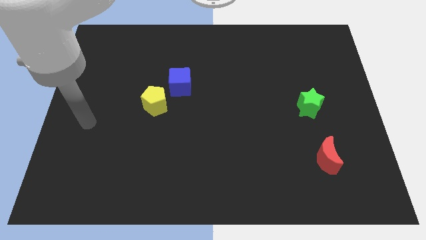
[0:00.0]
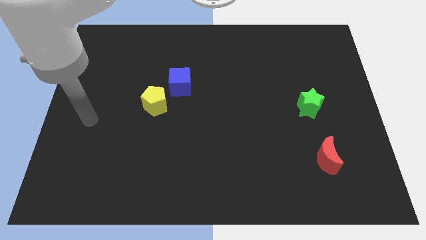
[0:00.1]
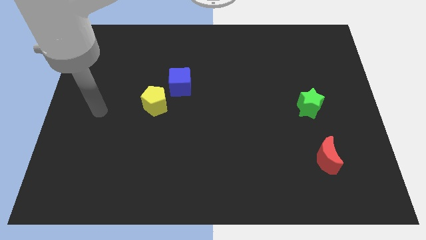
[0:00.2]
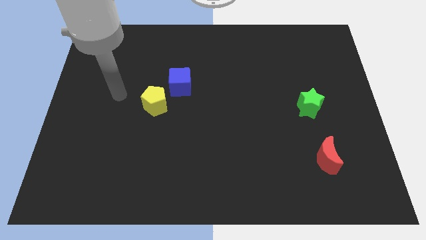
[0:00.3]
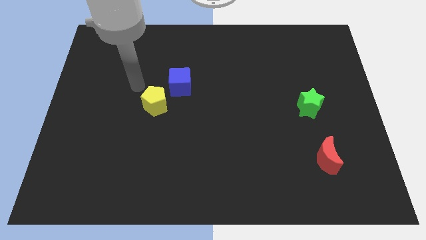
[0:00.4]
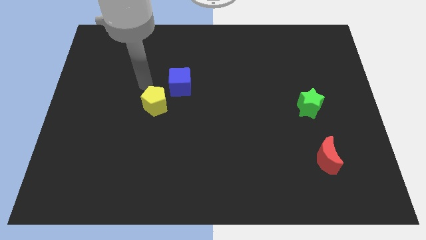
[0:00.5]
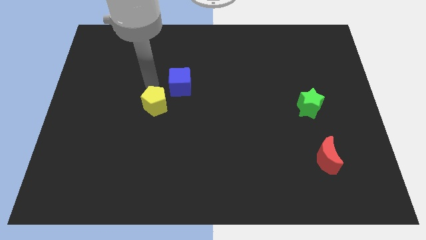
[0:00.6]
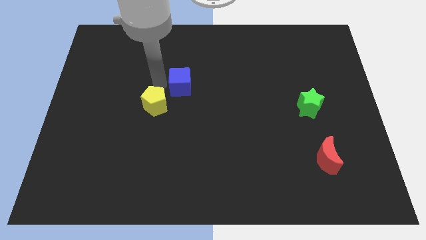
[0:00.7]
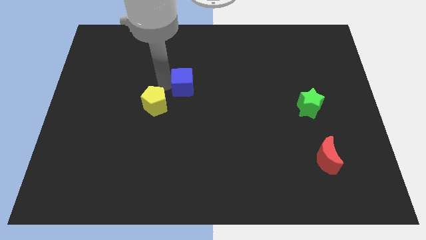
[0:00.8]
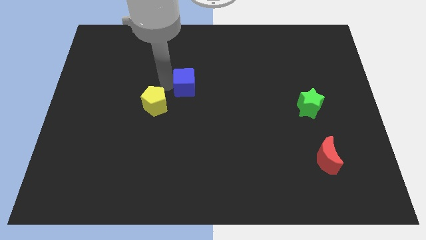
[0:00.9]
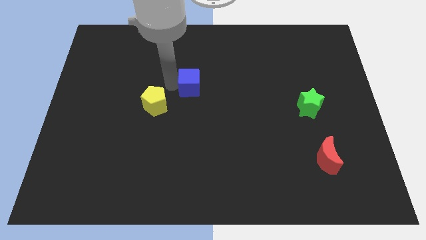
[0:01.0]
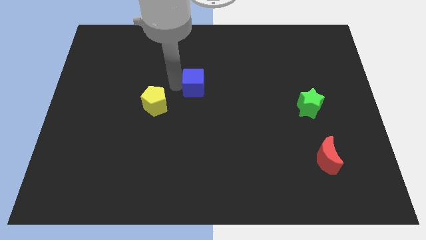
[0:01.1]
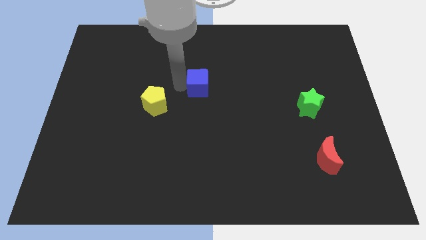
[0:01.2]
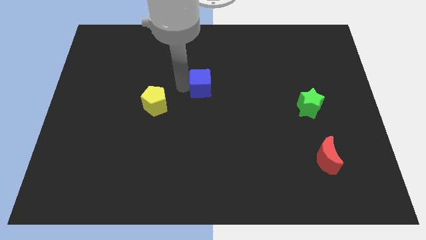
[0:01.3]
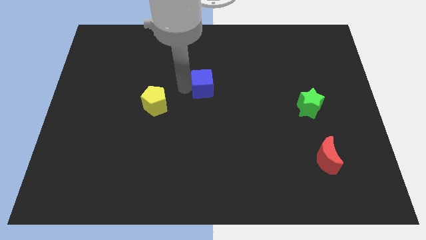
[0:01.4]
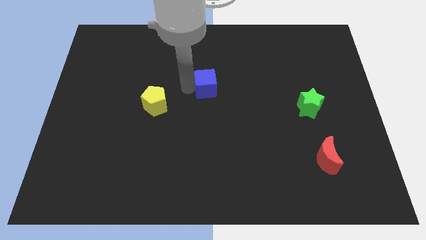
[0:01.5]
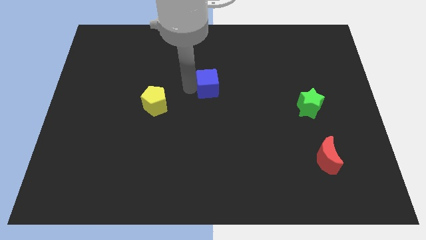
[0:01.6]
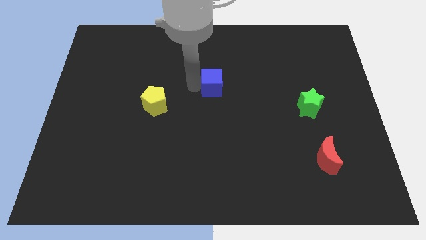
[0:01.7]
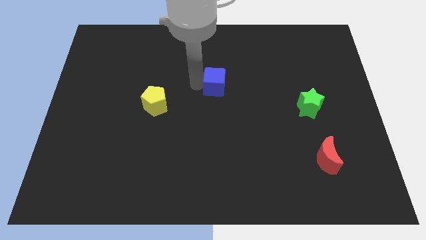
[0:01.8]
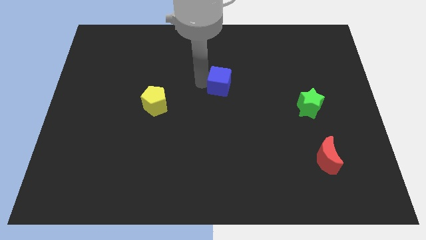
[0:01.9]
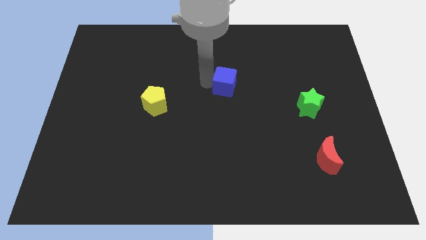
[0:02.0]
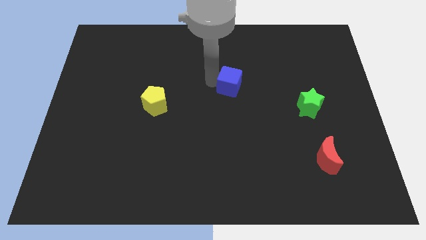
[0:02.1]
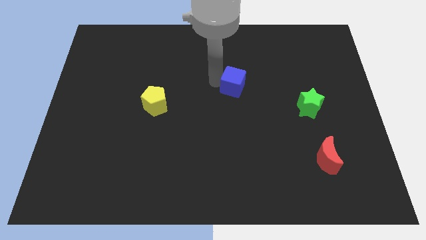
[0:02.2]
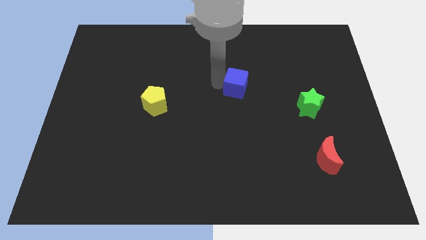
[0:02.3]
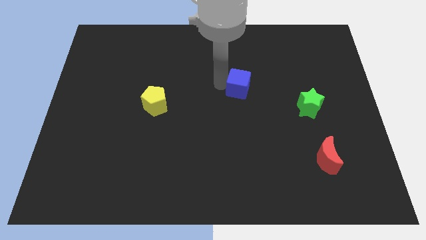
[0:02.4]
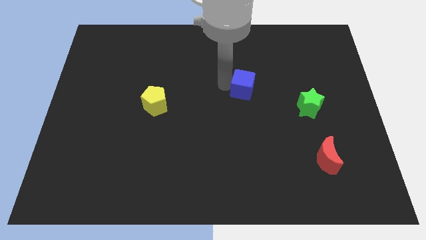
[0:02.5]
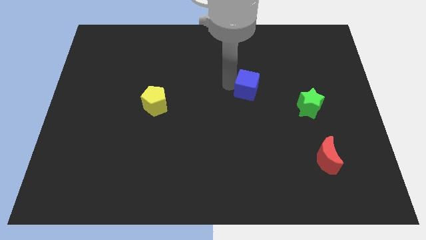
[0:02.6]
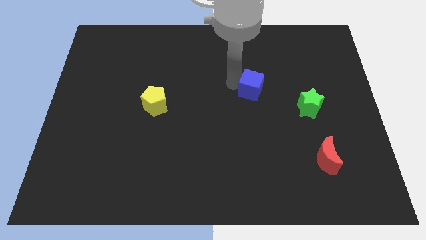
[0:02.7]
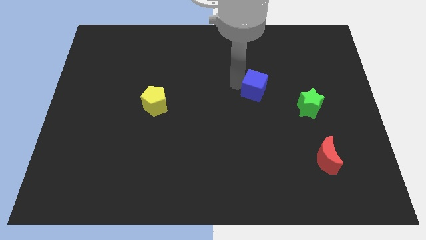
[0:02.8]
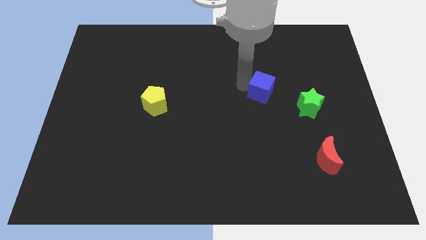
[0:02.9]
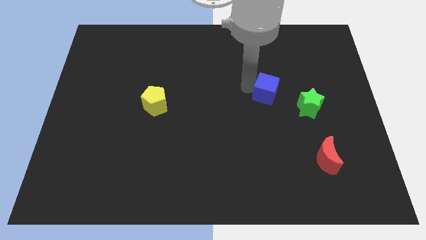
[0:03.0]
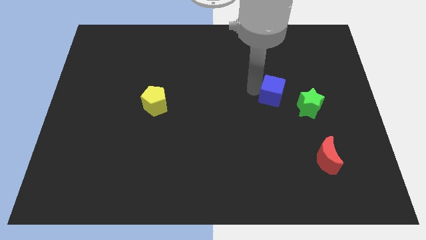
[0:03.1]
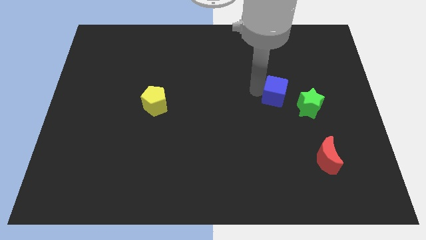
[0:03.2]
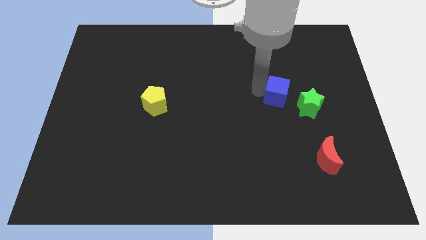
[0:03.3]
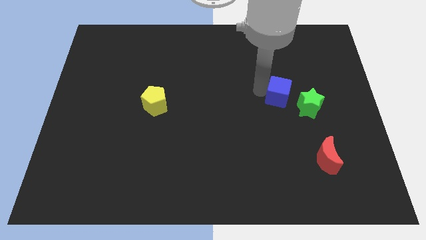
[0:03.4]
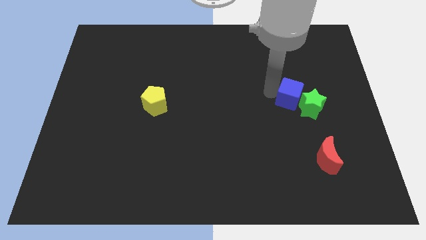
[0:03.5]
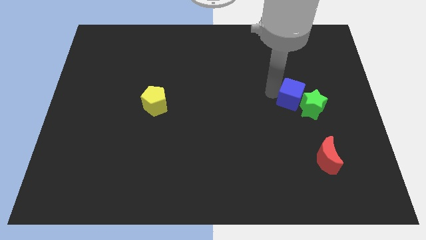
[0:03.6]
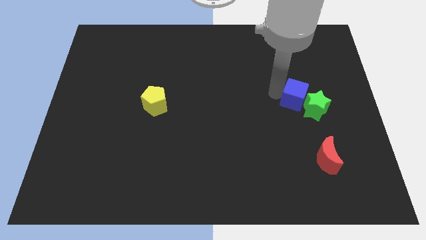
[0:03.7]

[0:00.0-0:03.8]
move the blue block towards the green block

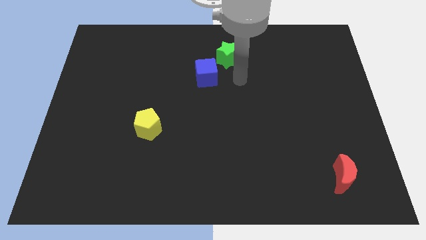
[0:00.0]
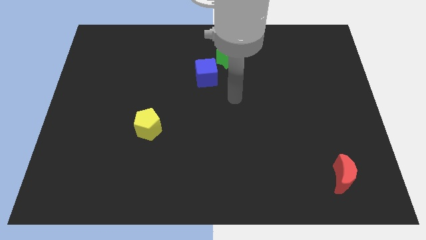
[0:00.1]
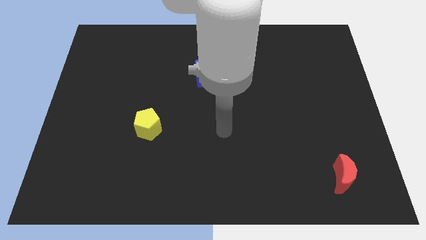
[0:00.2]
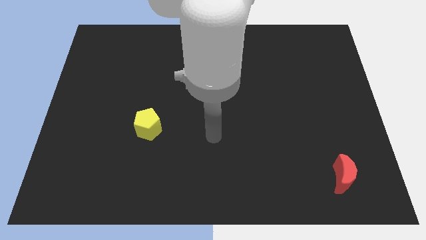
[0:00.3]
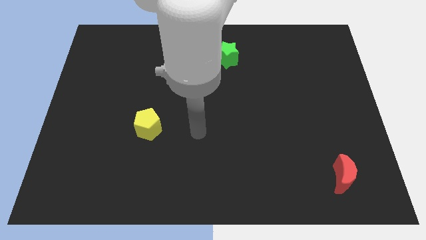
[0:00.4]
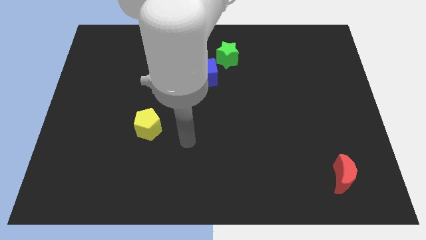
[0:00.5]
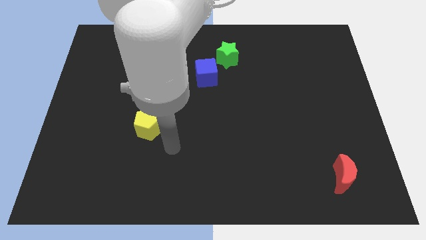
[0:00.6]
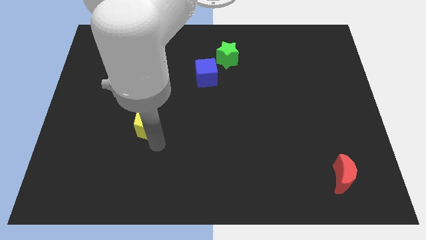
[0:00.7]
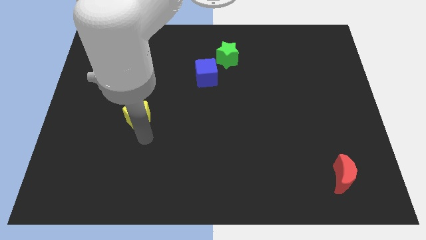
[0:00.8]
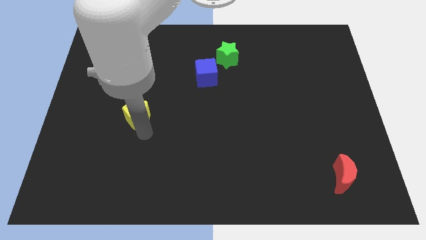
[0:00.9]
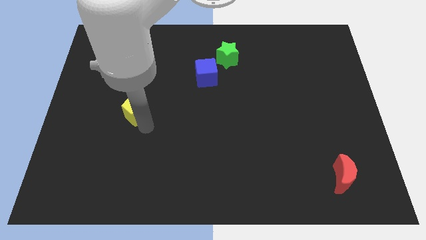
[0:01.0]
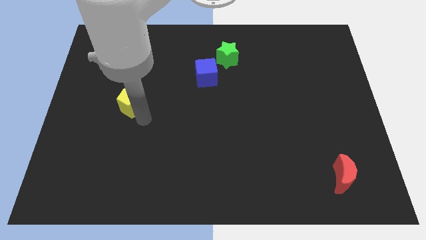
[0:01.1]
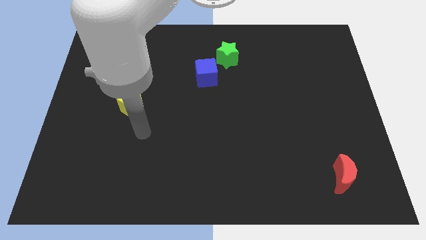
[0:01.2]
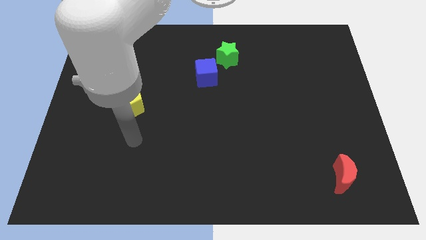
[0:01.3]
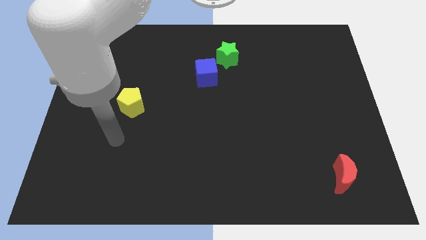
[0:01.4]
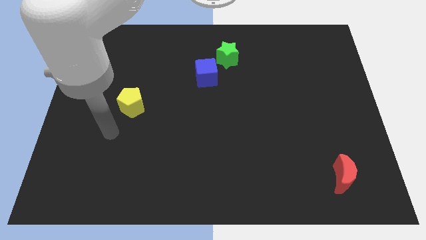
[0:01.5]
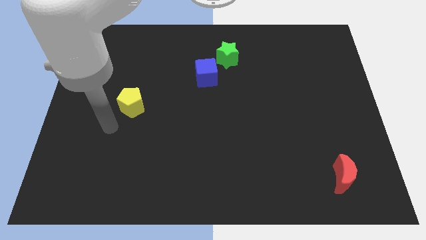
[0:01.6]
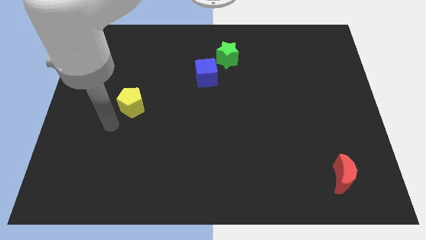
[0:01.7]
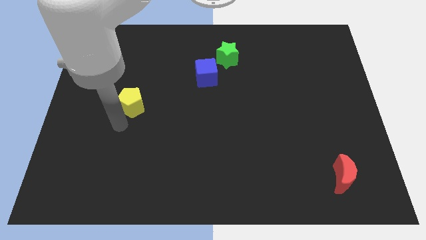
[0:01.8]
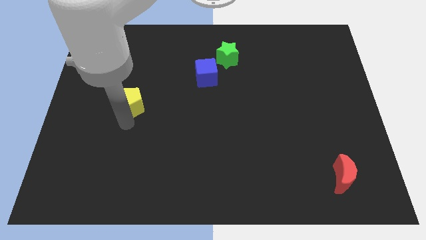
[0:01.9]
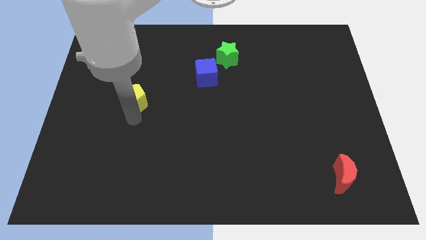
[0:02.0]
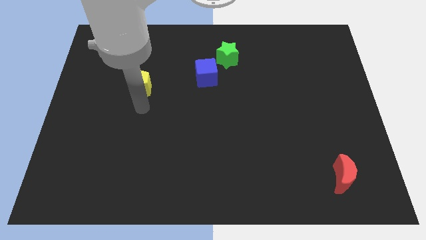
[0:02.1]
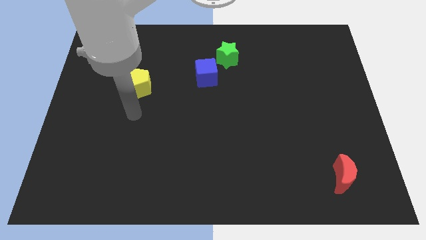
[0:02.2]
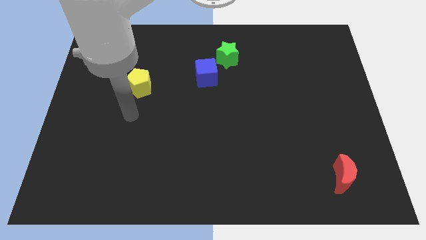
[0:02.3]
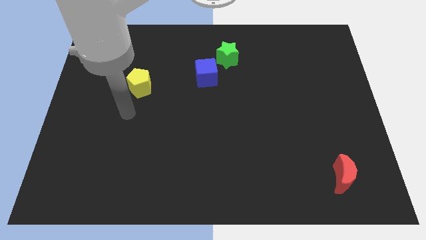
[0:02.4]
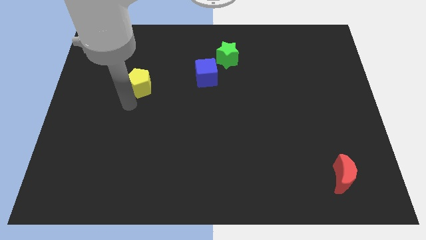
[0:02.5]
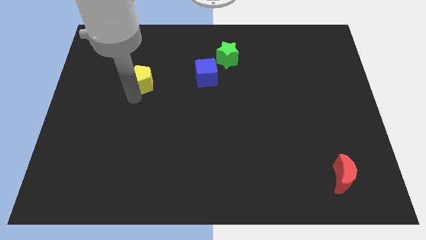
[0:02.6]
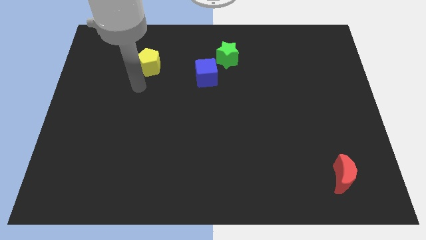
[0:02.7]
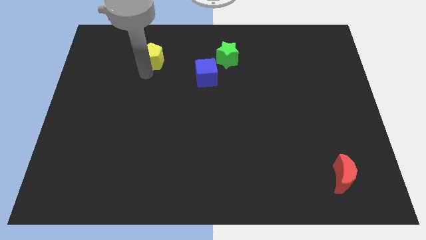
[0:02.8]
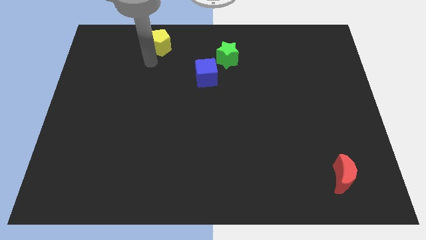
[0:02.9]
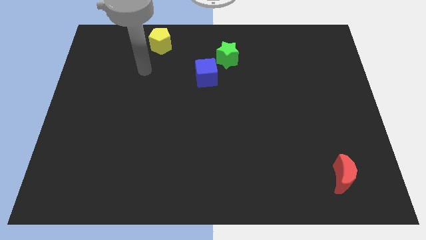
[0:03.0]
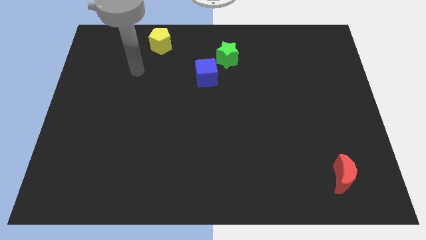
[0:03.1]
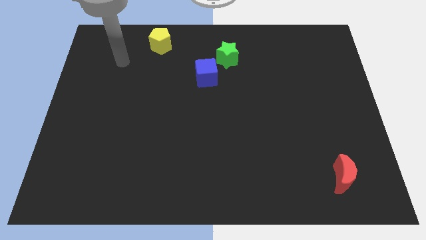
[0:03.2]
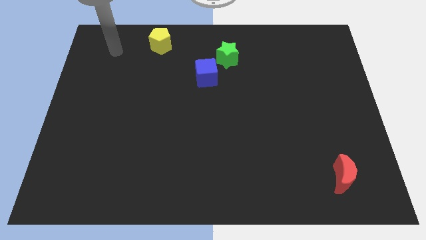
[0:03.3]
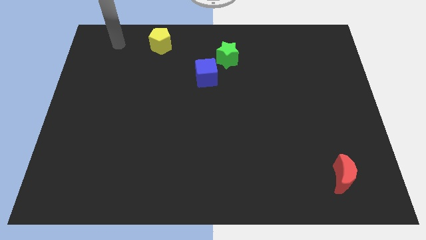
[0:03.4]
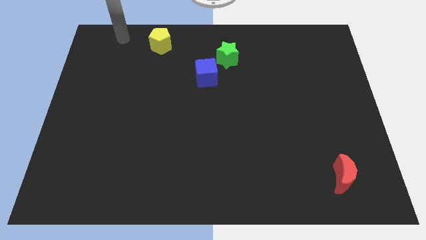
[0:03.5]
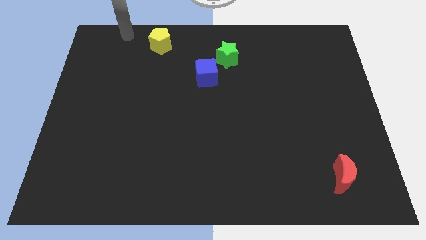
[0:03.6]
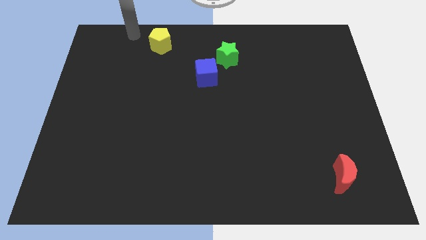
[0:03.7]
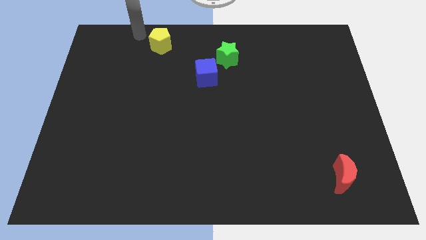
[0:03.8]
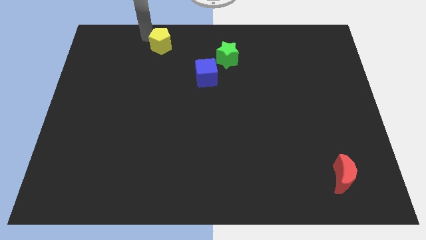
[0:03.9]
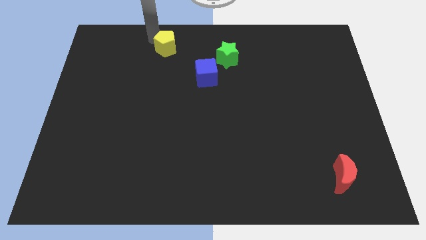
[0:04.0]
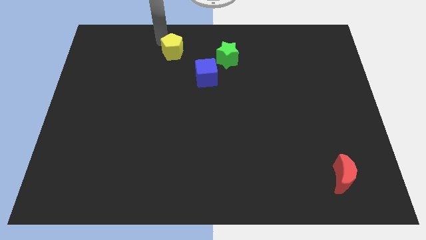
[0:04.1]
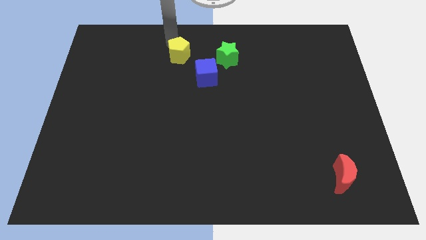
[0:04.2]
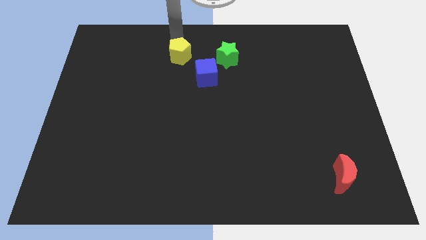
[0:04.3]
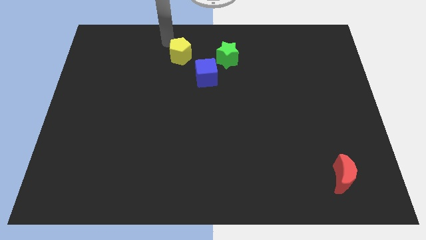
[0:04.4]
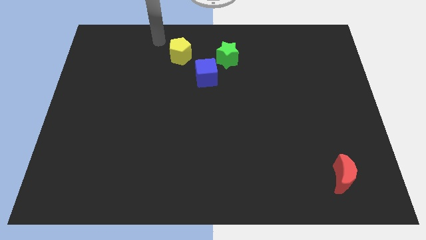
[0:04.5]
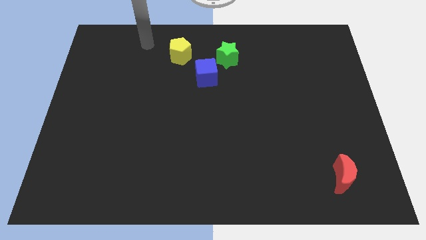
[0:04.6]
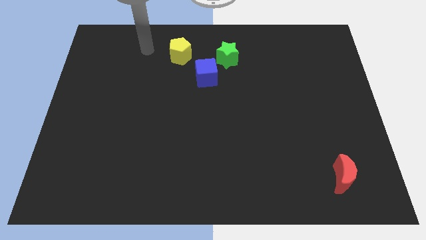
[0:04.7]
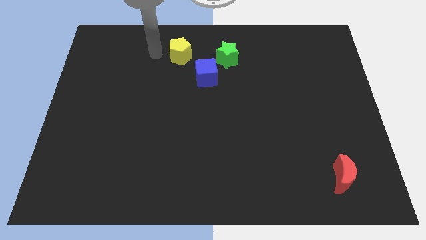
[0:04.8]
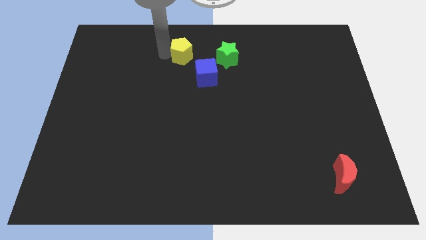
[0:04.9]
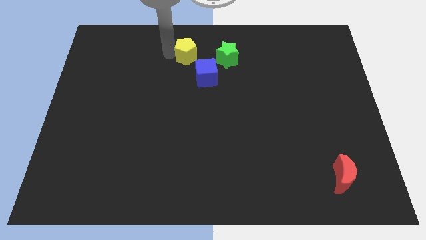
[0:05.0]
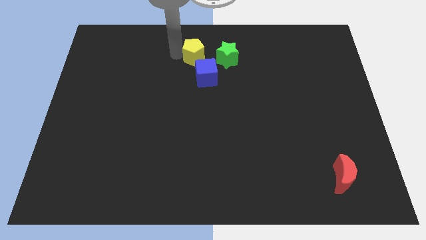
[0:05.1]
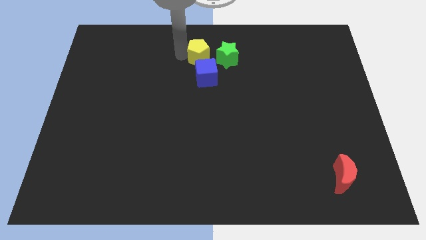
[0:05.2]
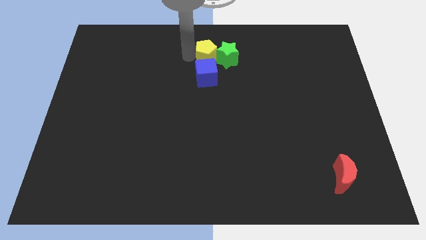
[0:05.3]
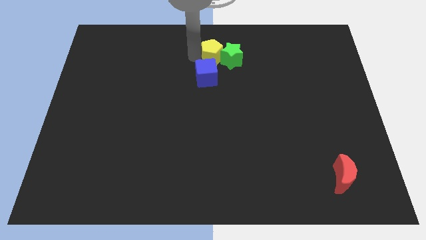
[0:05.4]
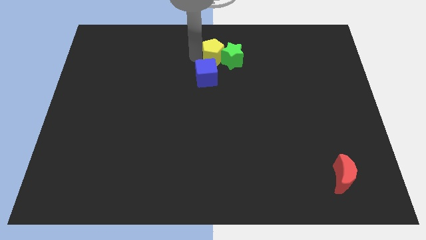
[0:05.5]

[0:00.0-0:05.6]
put the pentagon towards the green block
